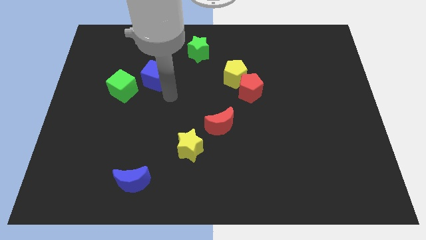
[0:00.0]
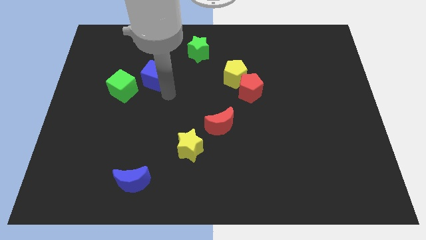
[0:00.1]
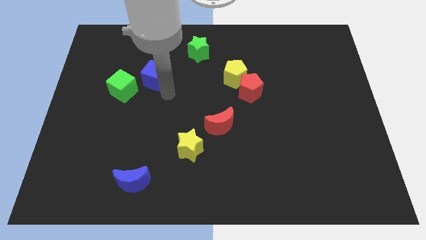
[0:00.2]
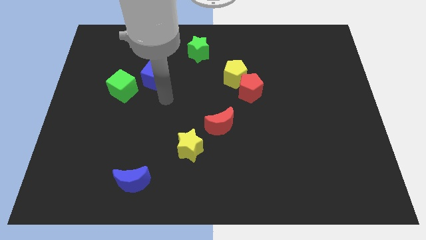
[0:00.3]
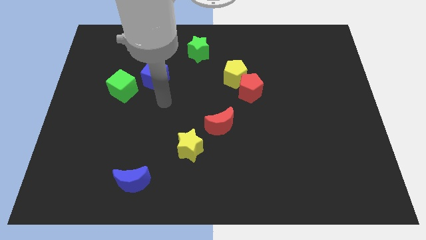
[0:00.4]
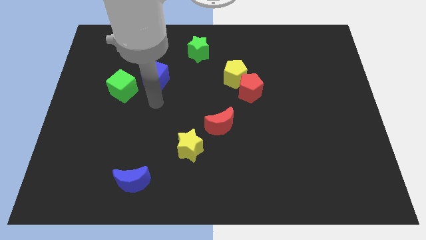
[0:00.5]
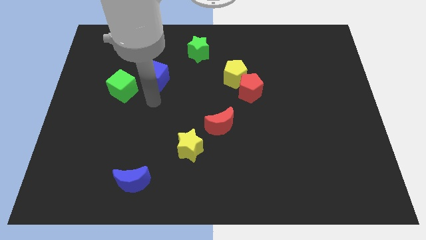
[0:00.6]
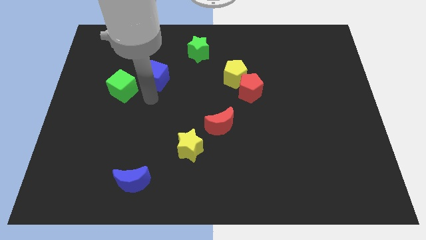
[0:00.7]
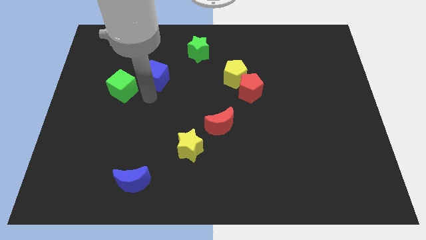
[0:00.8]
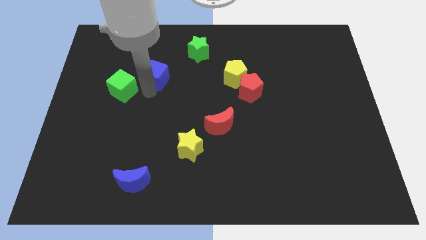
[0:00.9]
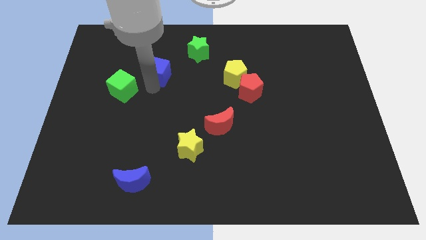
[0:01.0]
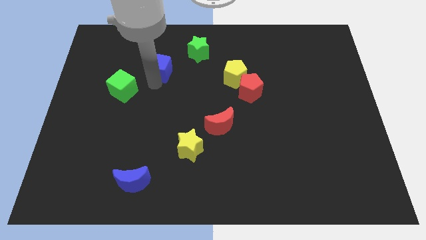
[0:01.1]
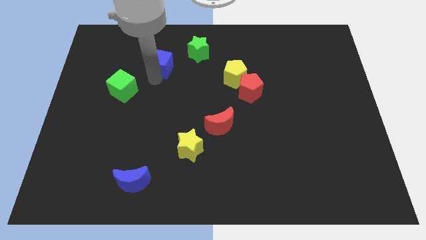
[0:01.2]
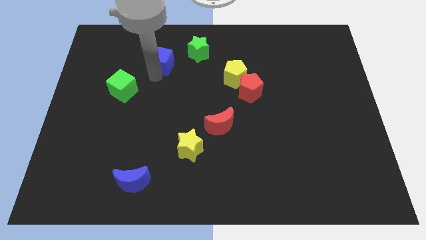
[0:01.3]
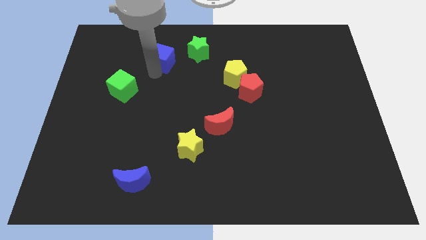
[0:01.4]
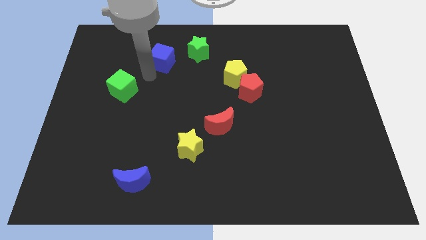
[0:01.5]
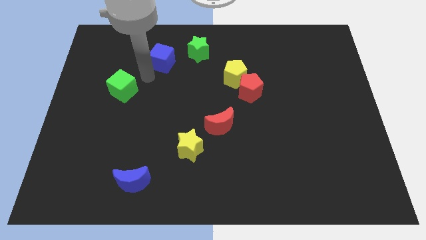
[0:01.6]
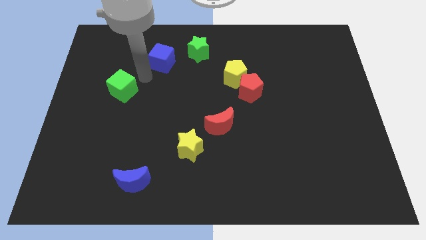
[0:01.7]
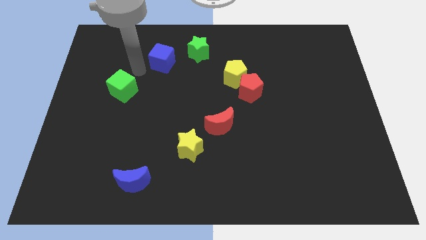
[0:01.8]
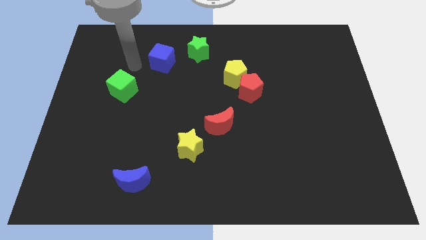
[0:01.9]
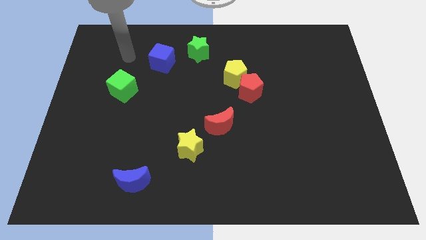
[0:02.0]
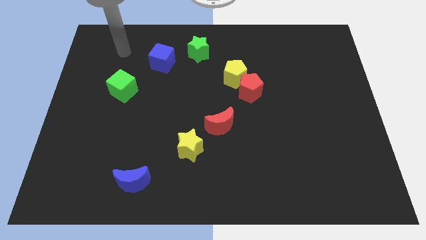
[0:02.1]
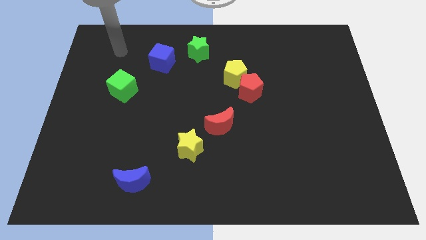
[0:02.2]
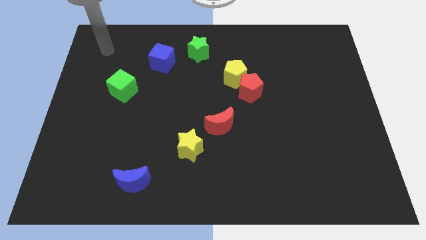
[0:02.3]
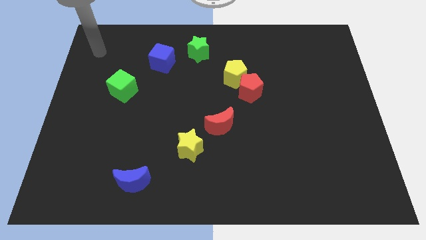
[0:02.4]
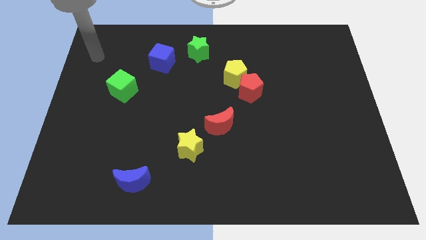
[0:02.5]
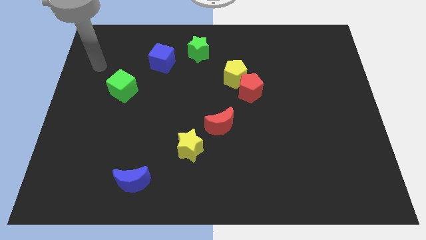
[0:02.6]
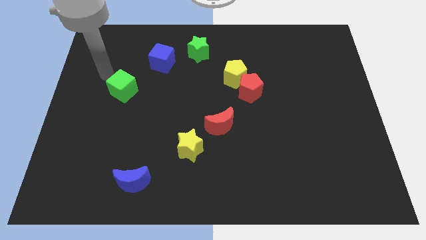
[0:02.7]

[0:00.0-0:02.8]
place the arm near the green cube

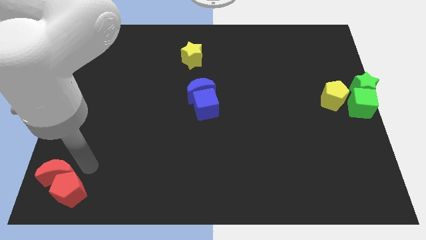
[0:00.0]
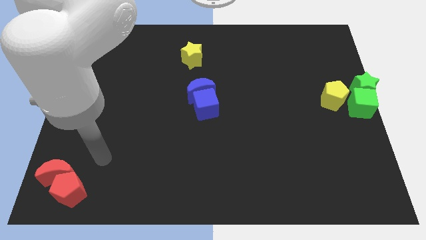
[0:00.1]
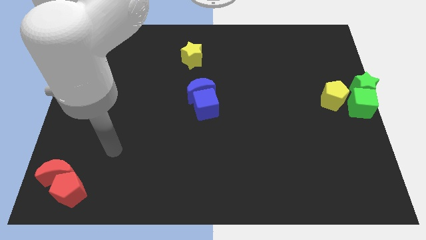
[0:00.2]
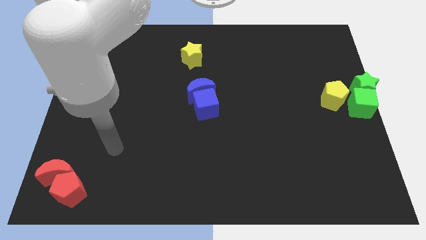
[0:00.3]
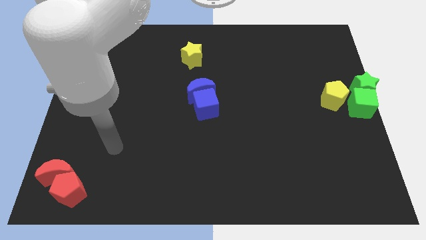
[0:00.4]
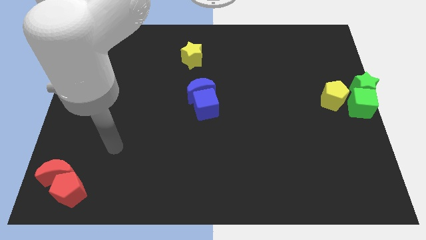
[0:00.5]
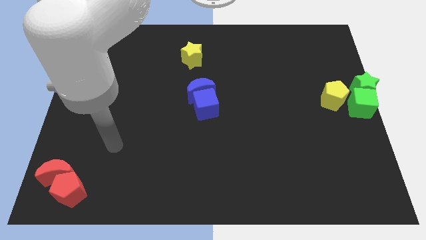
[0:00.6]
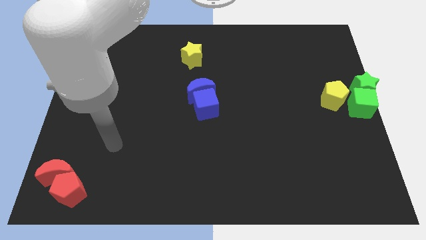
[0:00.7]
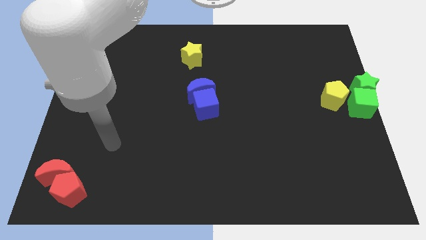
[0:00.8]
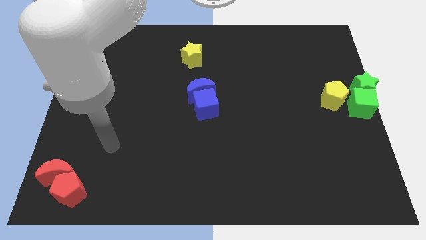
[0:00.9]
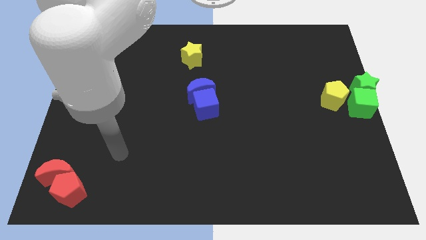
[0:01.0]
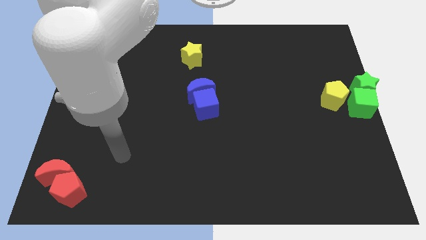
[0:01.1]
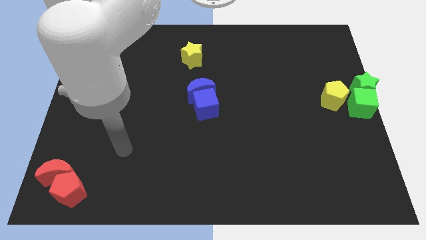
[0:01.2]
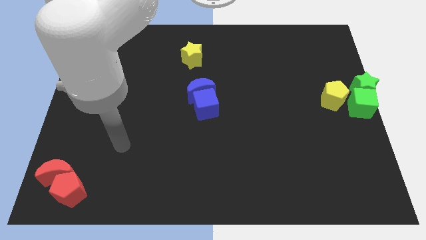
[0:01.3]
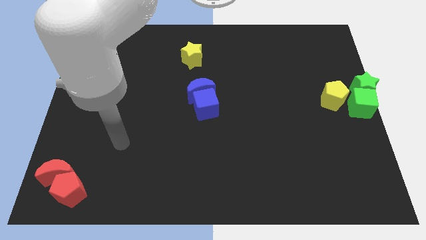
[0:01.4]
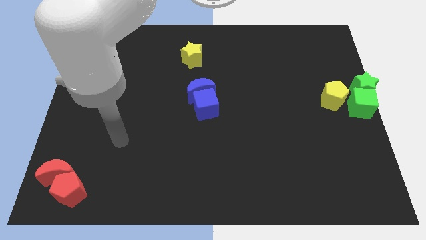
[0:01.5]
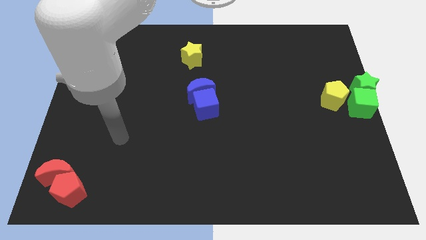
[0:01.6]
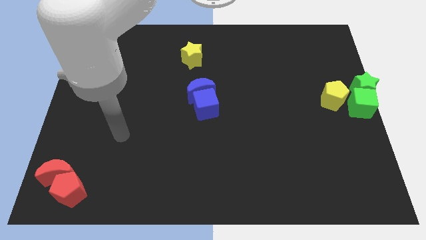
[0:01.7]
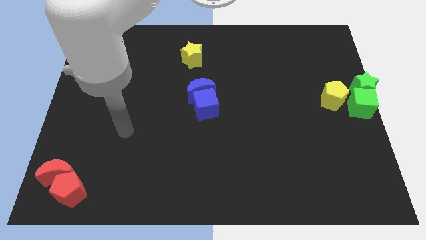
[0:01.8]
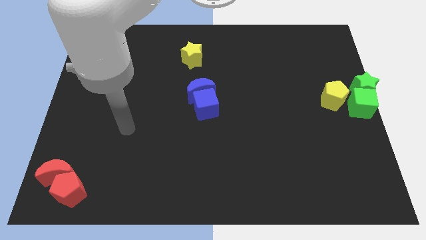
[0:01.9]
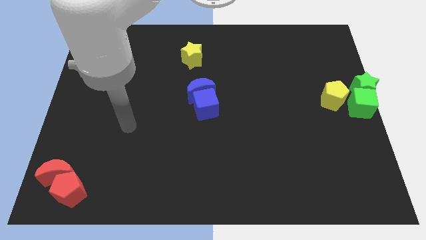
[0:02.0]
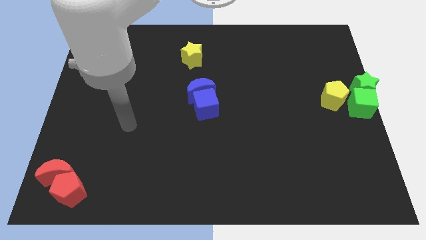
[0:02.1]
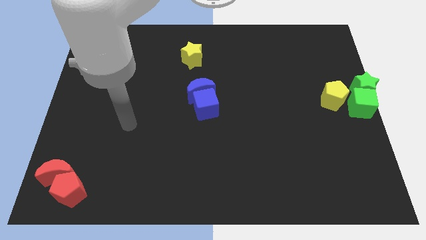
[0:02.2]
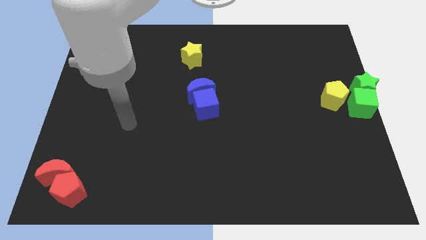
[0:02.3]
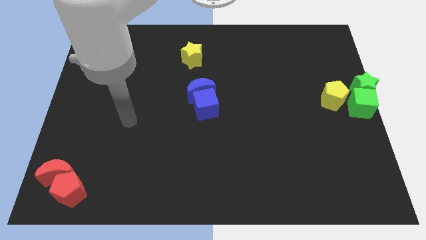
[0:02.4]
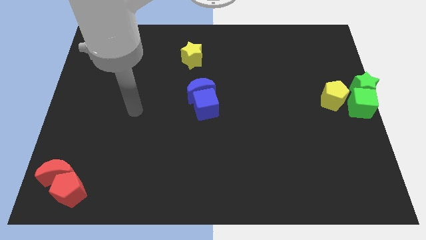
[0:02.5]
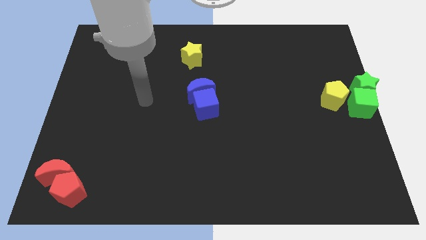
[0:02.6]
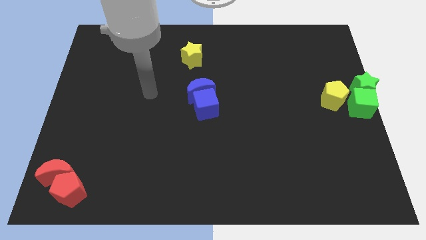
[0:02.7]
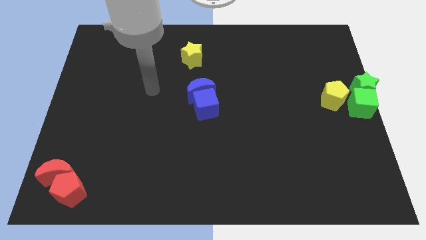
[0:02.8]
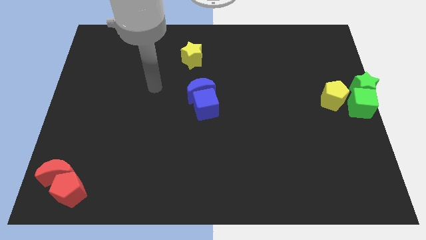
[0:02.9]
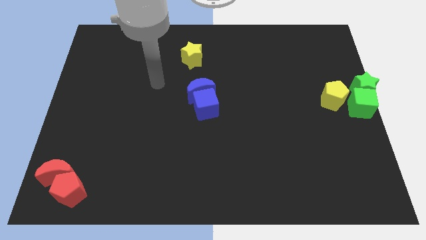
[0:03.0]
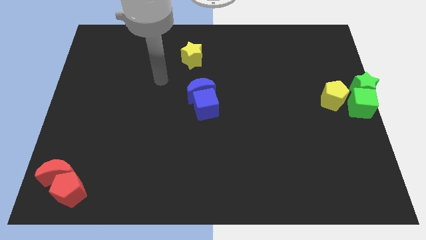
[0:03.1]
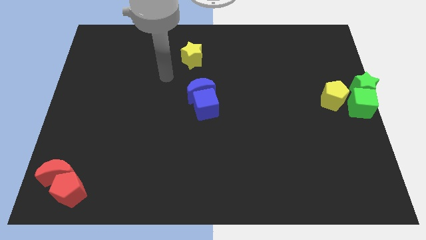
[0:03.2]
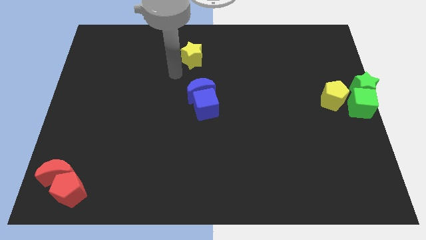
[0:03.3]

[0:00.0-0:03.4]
move your arm towards the yellow star

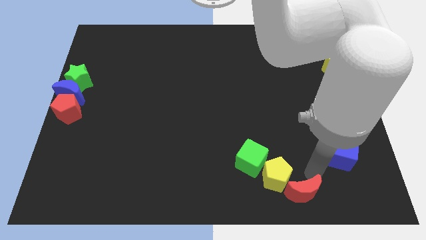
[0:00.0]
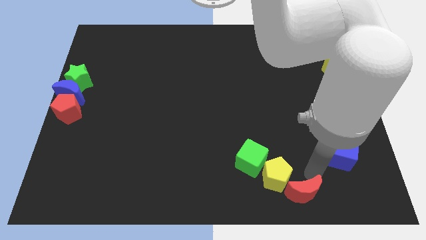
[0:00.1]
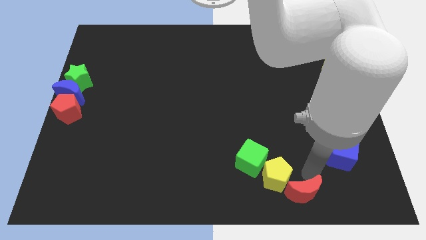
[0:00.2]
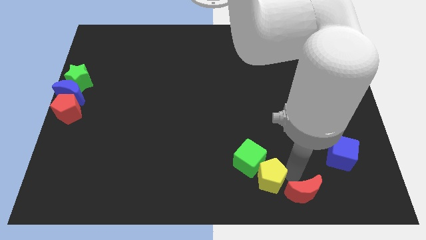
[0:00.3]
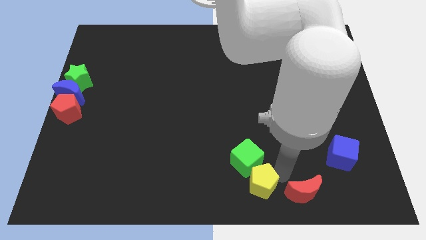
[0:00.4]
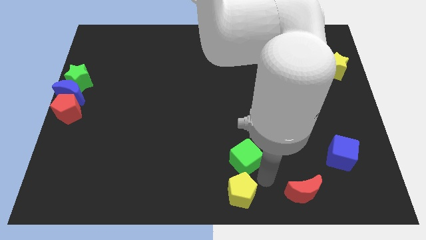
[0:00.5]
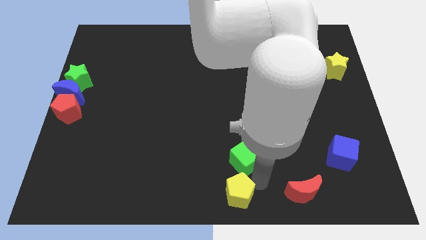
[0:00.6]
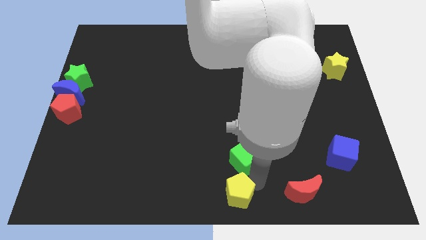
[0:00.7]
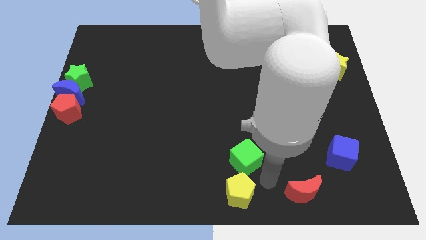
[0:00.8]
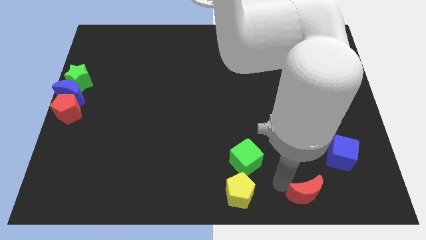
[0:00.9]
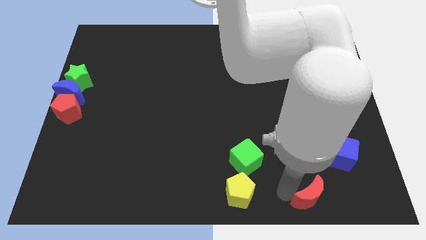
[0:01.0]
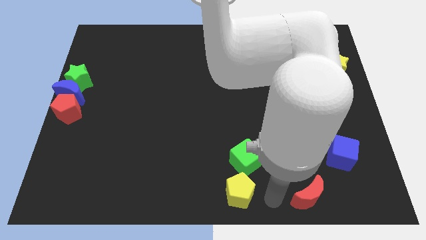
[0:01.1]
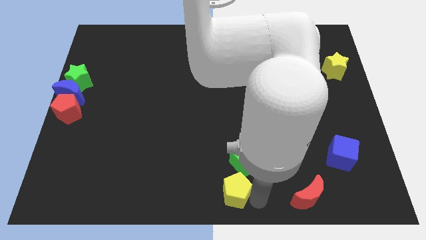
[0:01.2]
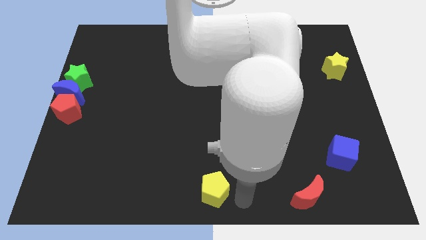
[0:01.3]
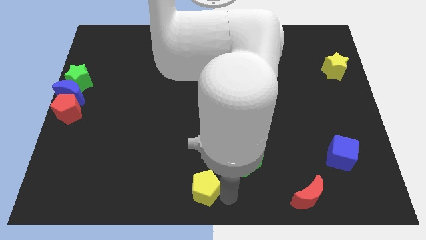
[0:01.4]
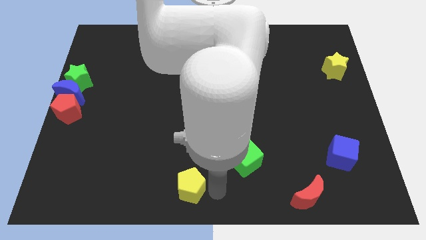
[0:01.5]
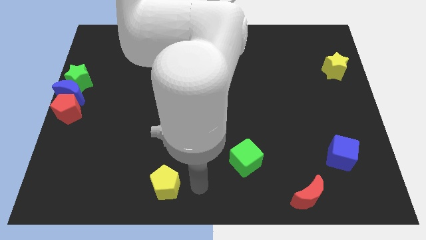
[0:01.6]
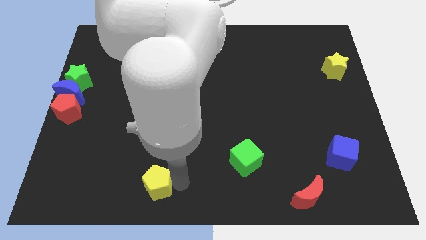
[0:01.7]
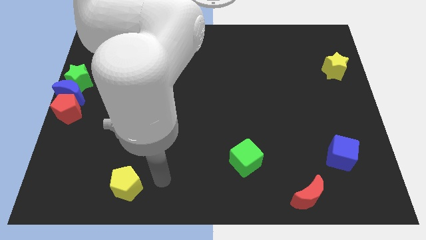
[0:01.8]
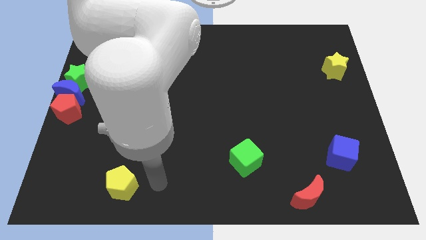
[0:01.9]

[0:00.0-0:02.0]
move the yellow pentagon diagonal to red pentagon

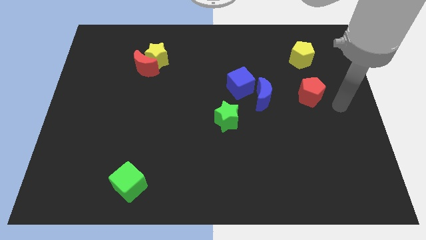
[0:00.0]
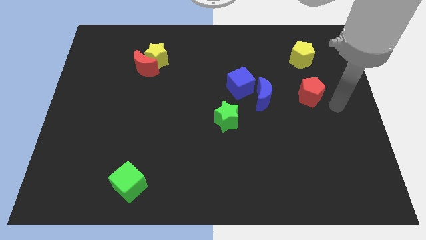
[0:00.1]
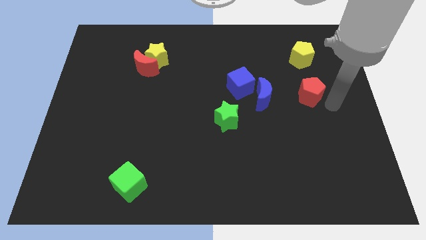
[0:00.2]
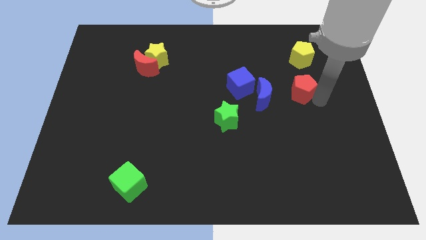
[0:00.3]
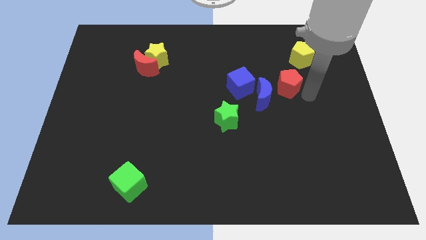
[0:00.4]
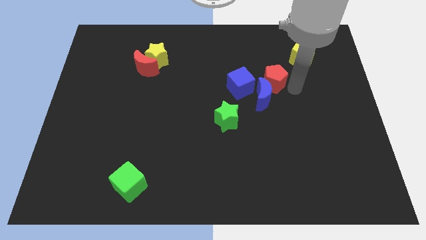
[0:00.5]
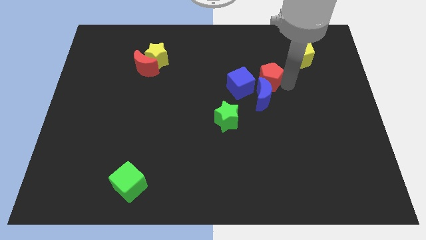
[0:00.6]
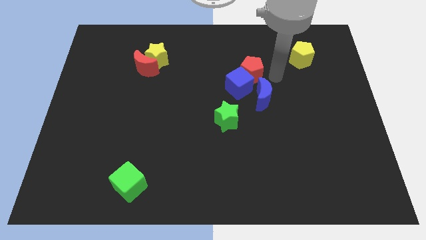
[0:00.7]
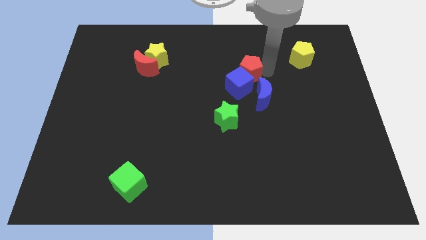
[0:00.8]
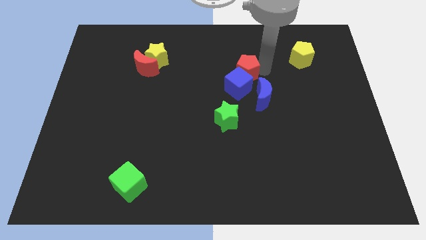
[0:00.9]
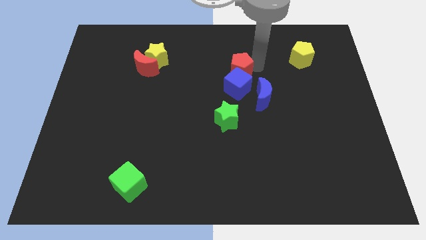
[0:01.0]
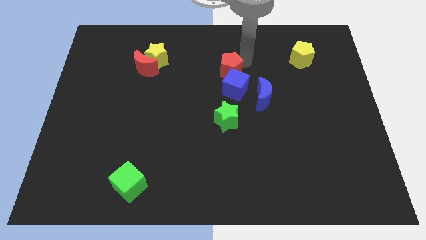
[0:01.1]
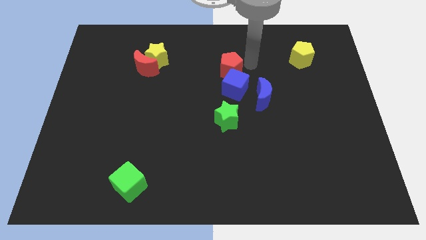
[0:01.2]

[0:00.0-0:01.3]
place red pentagon above blue cube
